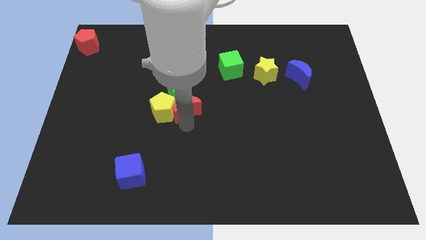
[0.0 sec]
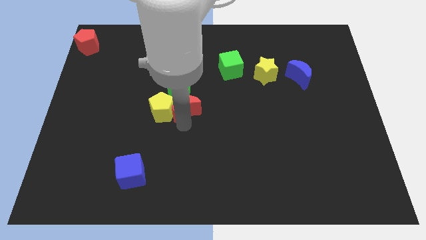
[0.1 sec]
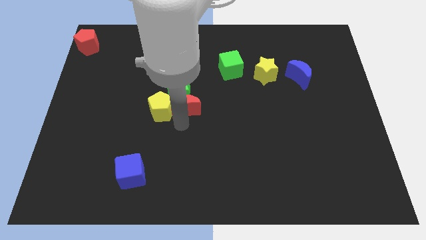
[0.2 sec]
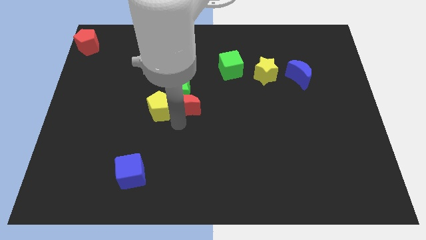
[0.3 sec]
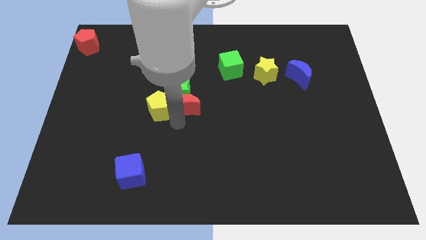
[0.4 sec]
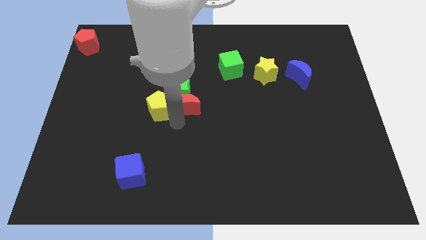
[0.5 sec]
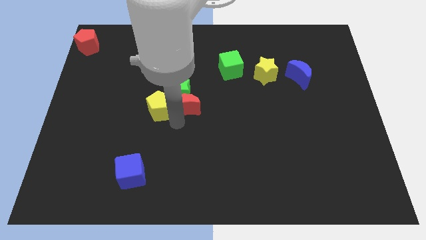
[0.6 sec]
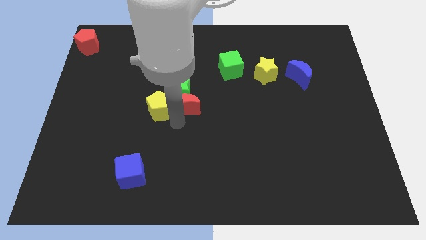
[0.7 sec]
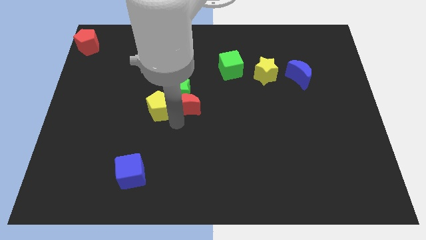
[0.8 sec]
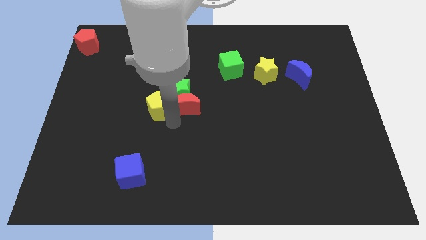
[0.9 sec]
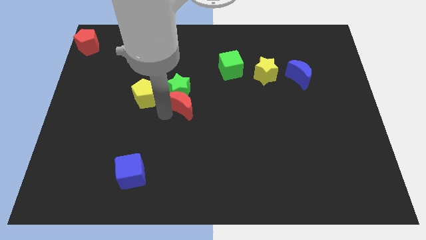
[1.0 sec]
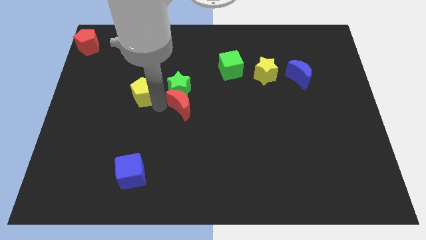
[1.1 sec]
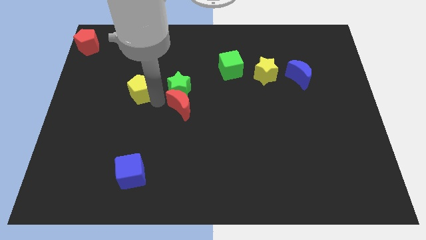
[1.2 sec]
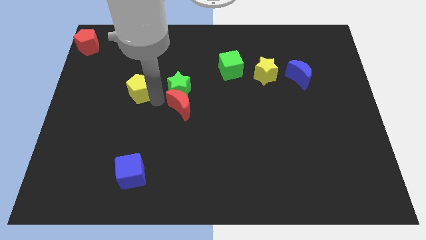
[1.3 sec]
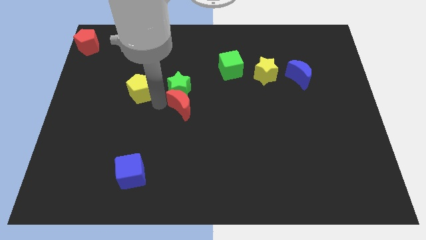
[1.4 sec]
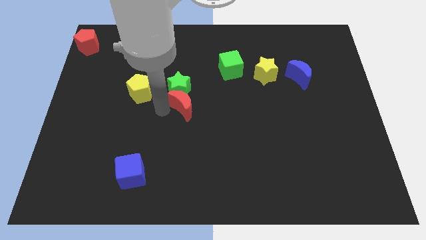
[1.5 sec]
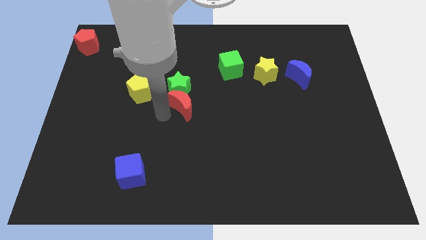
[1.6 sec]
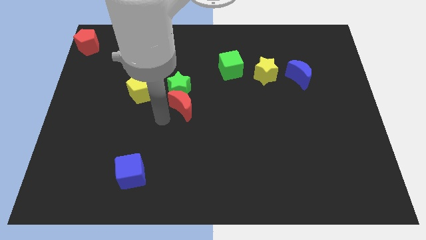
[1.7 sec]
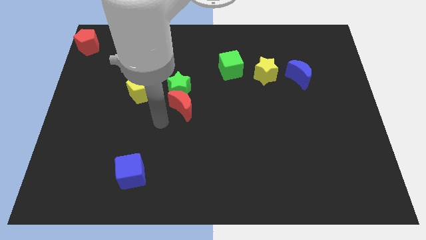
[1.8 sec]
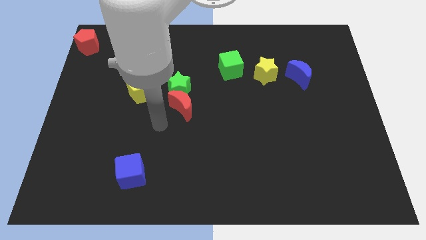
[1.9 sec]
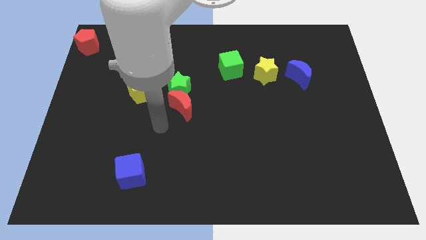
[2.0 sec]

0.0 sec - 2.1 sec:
separate the yellow pentagon from the green star

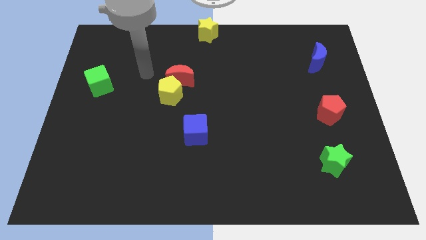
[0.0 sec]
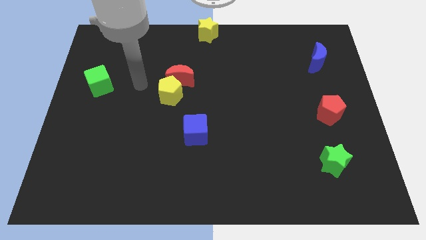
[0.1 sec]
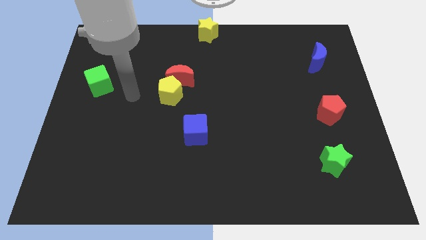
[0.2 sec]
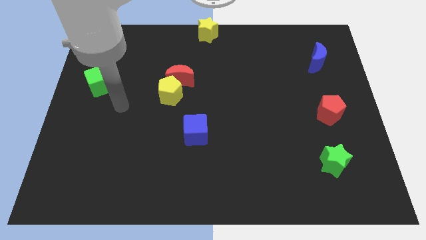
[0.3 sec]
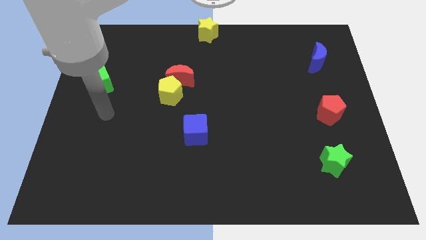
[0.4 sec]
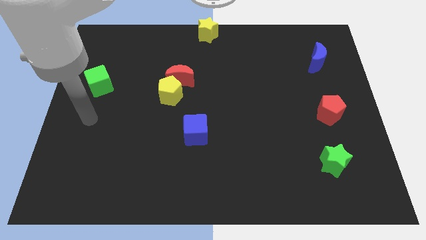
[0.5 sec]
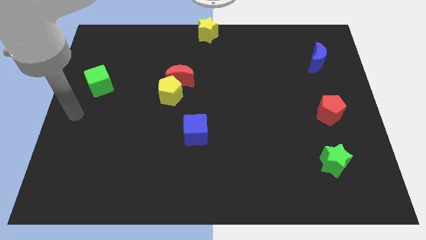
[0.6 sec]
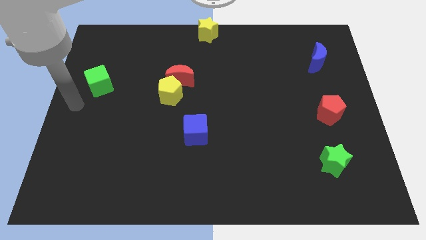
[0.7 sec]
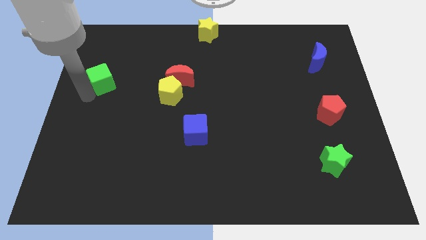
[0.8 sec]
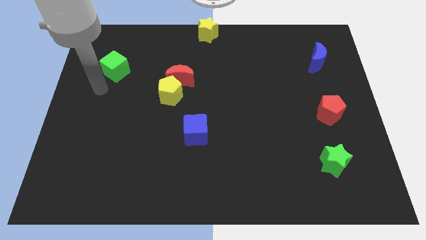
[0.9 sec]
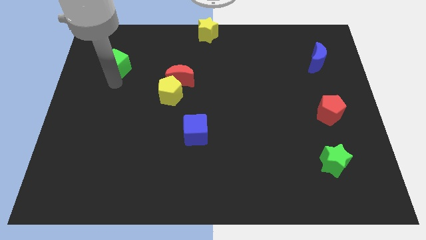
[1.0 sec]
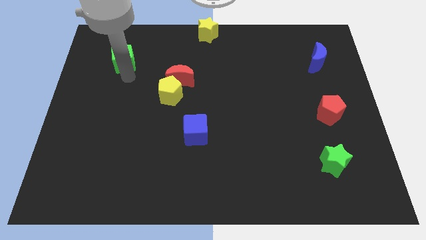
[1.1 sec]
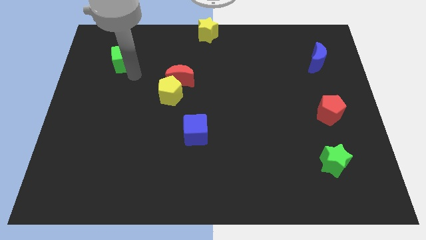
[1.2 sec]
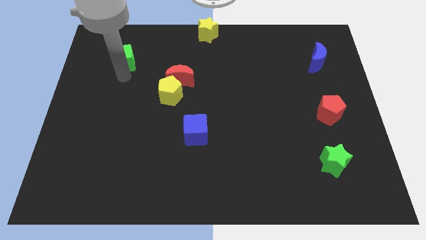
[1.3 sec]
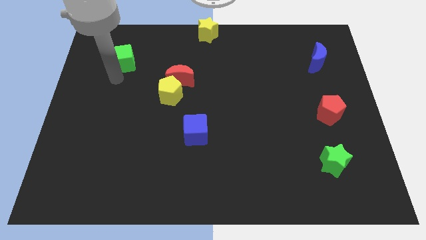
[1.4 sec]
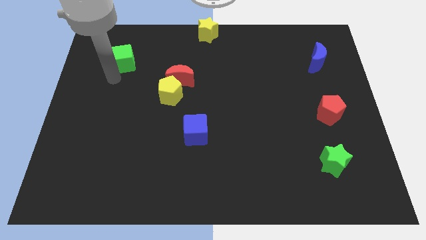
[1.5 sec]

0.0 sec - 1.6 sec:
move the green cube towards the top side

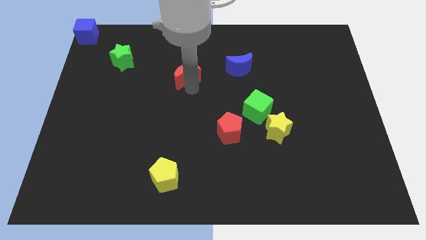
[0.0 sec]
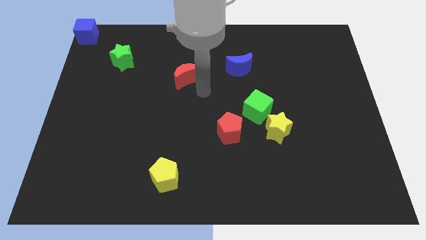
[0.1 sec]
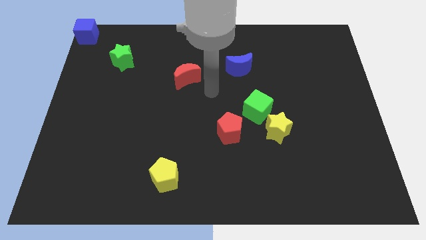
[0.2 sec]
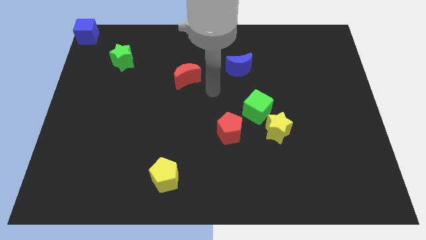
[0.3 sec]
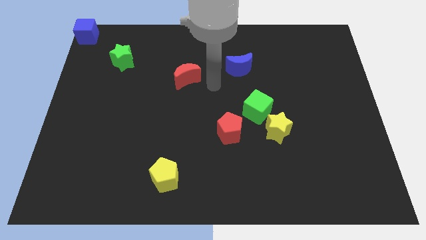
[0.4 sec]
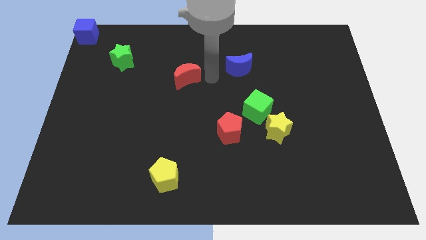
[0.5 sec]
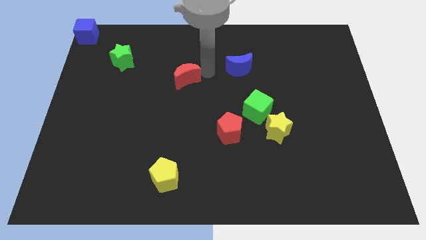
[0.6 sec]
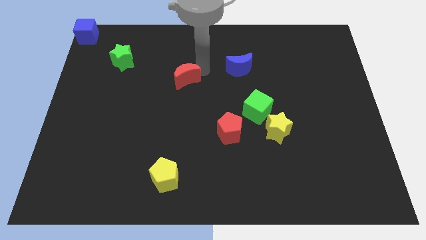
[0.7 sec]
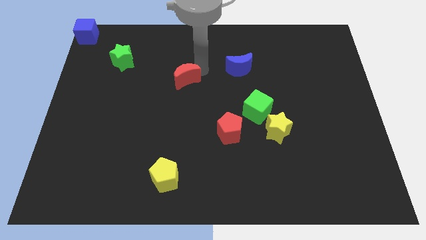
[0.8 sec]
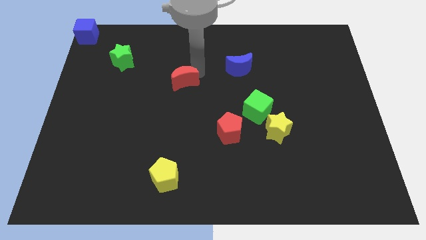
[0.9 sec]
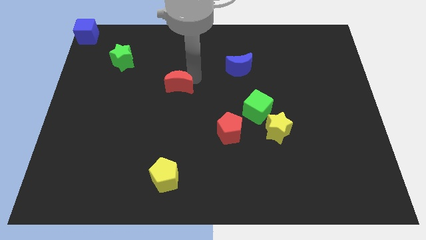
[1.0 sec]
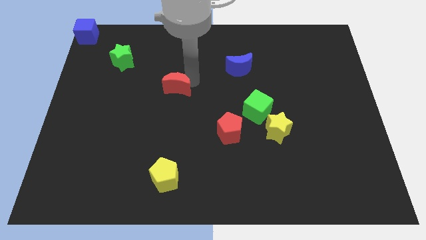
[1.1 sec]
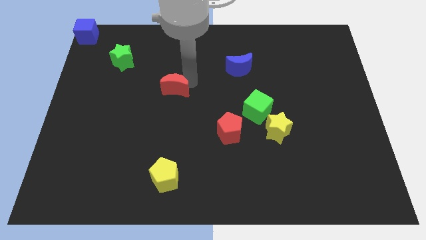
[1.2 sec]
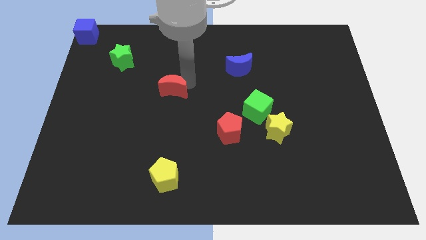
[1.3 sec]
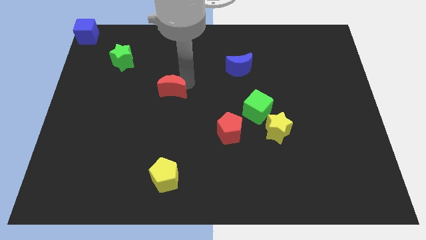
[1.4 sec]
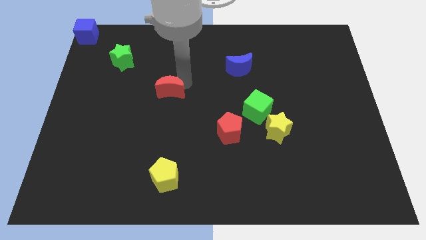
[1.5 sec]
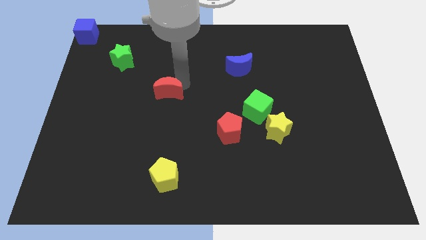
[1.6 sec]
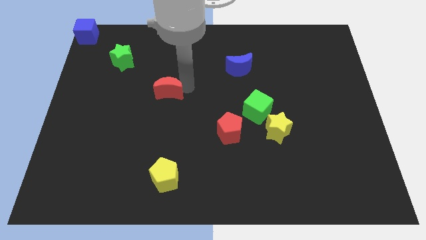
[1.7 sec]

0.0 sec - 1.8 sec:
push the red moon slightly to the bottom of the board

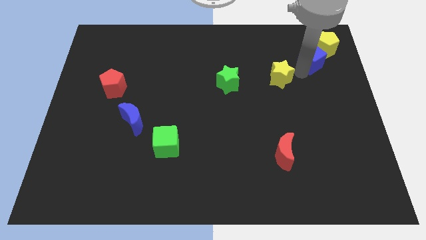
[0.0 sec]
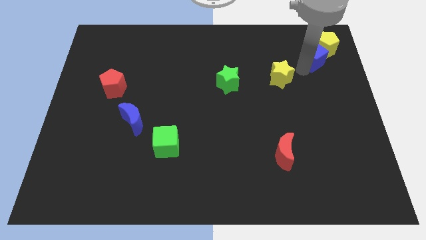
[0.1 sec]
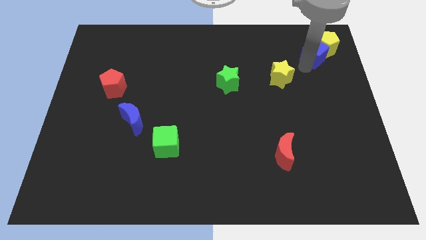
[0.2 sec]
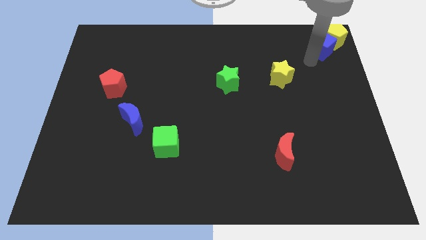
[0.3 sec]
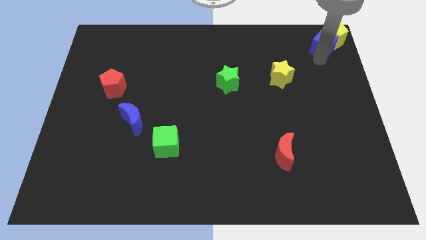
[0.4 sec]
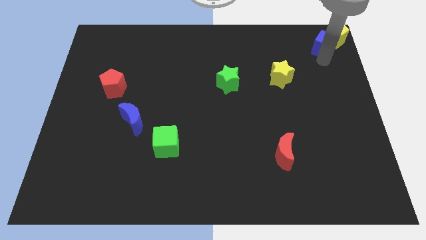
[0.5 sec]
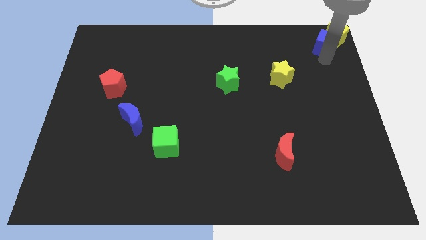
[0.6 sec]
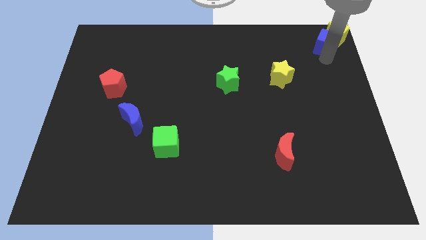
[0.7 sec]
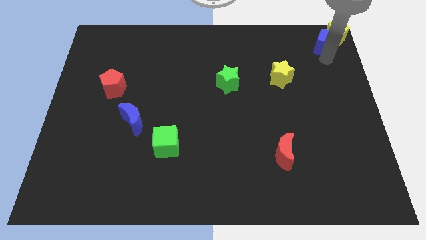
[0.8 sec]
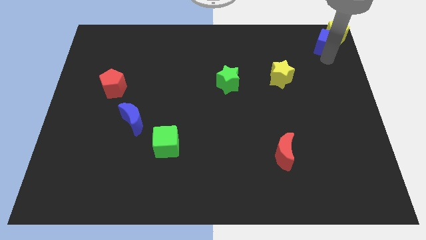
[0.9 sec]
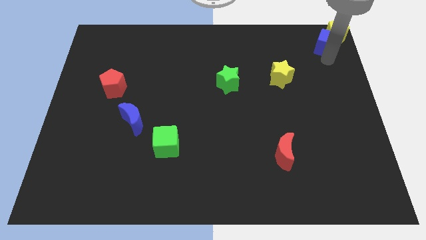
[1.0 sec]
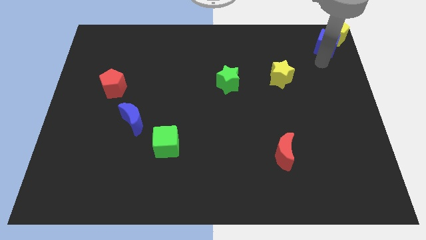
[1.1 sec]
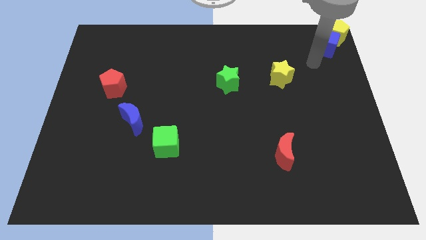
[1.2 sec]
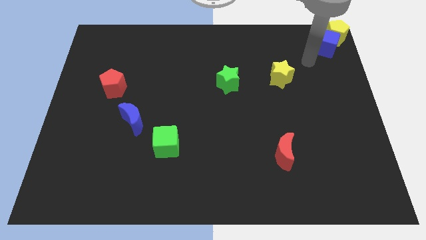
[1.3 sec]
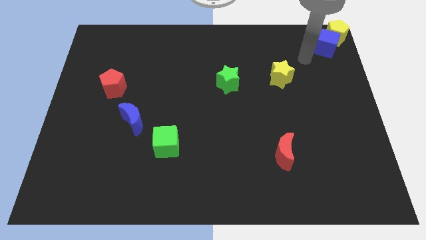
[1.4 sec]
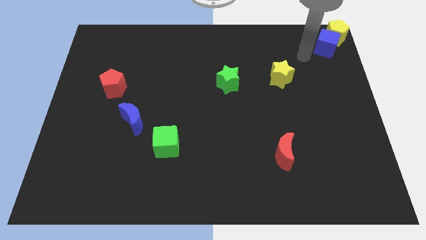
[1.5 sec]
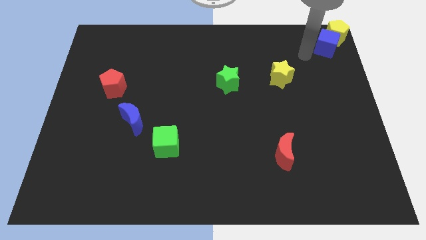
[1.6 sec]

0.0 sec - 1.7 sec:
push the blue cube into the yellow pentagon

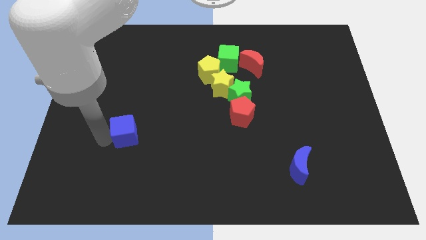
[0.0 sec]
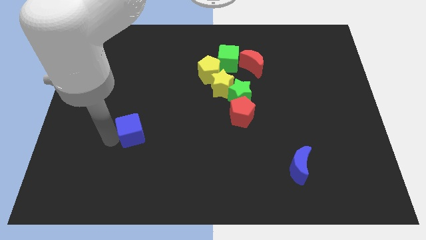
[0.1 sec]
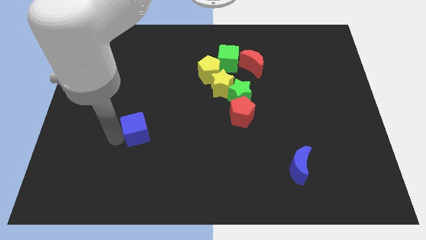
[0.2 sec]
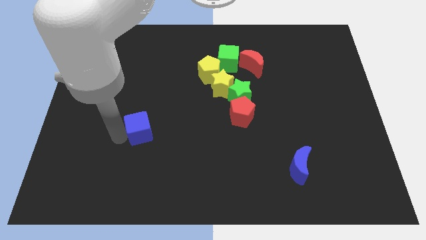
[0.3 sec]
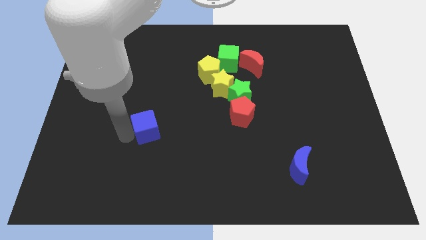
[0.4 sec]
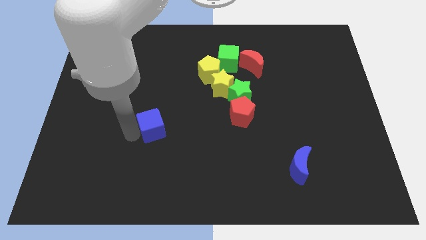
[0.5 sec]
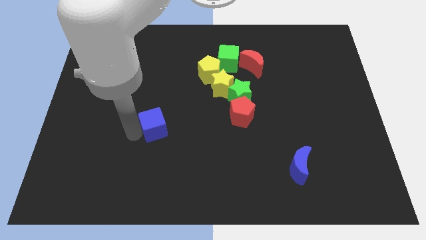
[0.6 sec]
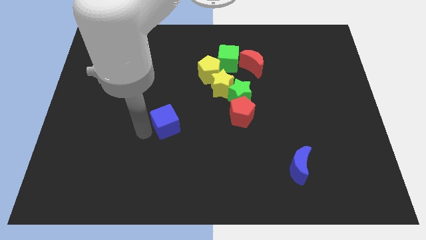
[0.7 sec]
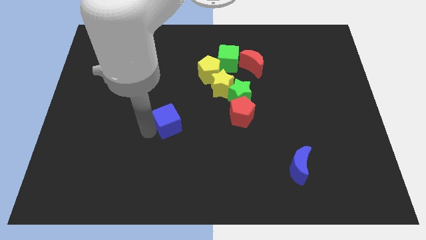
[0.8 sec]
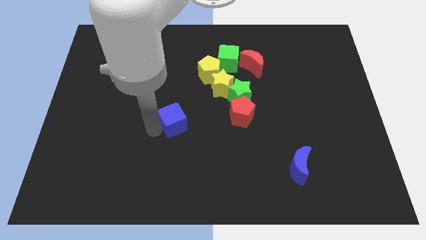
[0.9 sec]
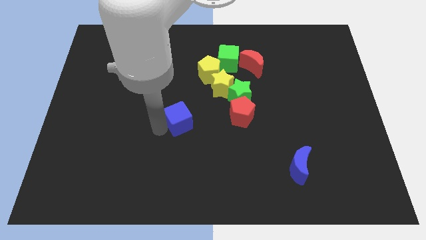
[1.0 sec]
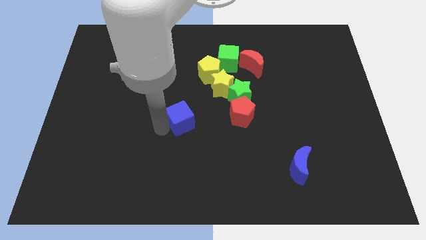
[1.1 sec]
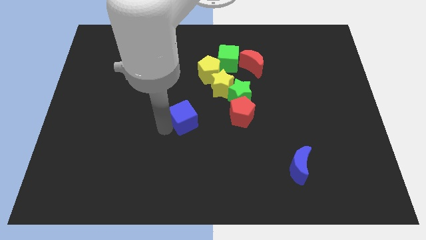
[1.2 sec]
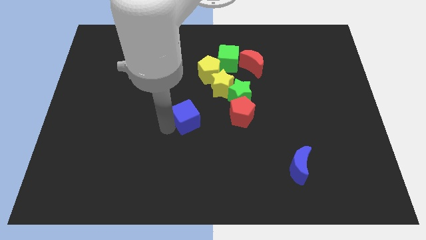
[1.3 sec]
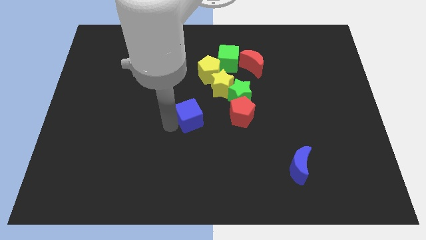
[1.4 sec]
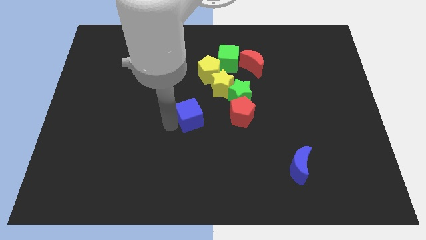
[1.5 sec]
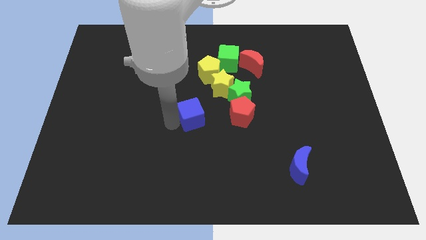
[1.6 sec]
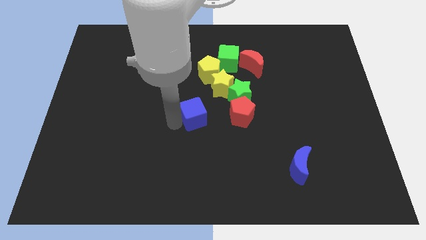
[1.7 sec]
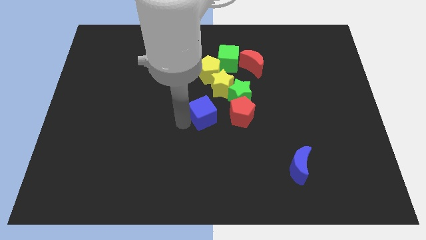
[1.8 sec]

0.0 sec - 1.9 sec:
drag blue cube left to red pentagon
